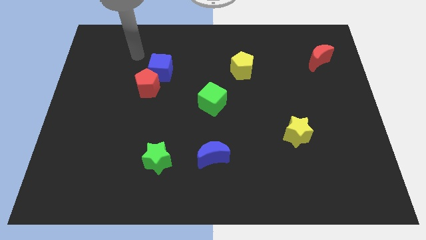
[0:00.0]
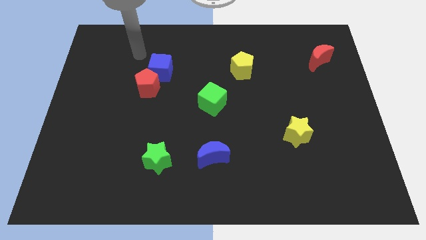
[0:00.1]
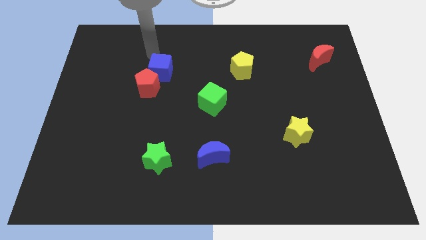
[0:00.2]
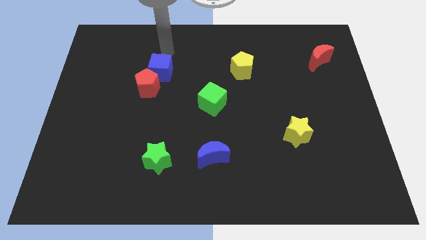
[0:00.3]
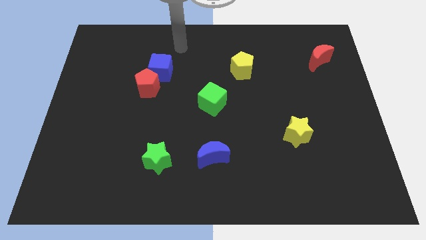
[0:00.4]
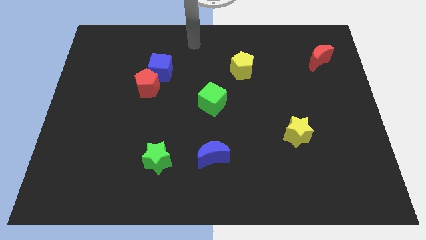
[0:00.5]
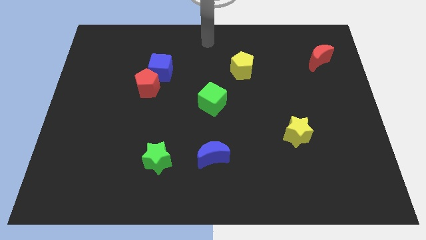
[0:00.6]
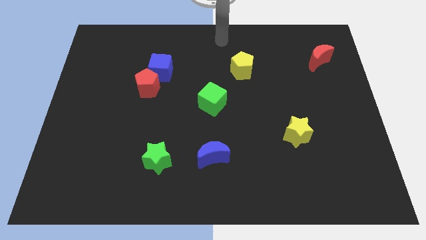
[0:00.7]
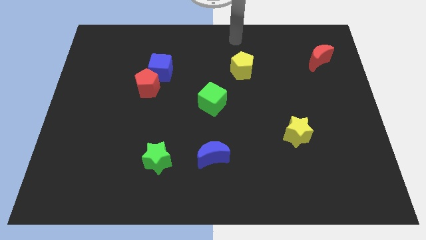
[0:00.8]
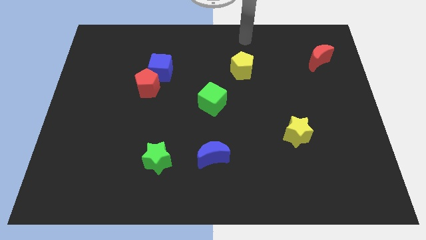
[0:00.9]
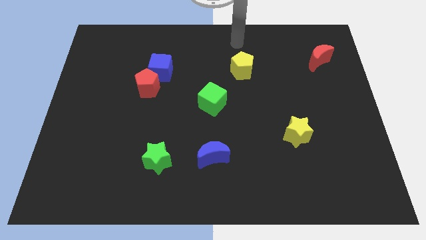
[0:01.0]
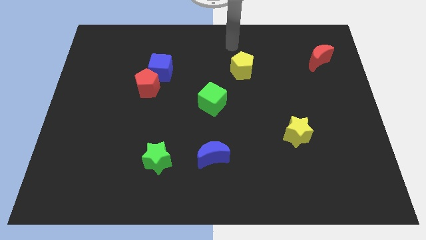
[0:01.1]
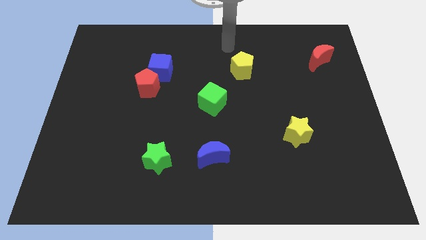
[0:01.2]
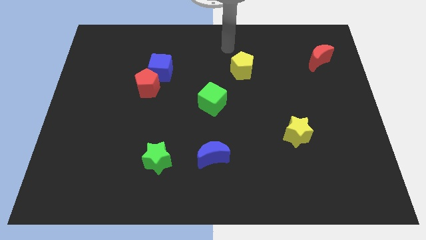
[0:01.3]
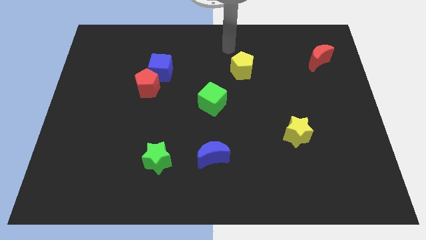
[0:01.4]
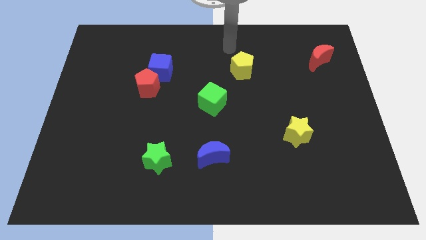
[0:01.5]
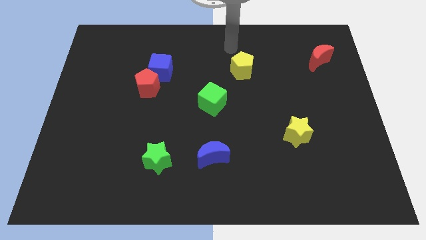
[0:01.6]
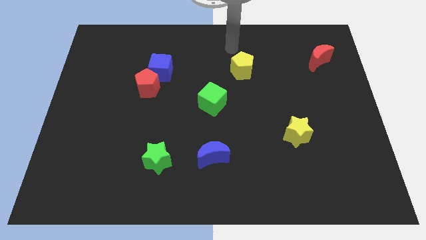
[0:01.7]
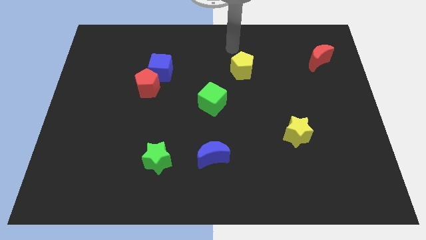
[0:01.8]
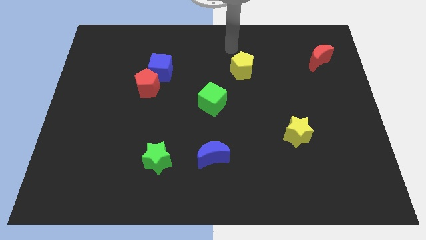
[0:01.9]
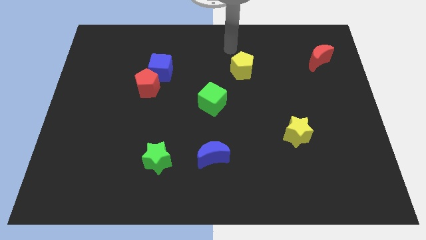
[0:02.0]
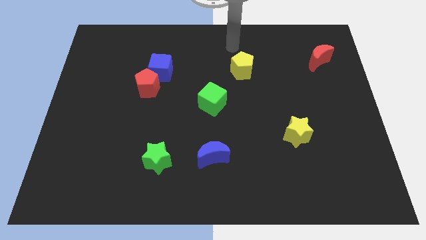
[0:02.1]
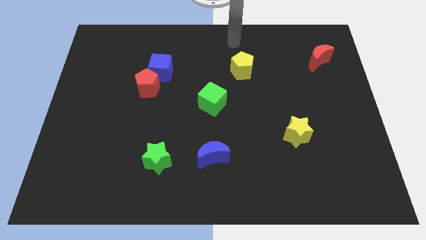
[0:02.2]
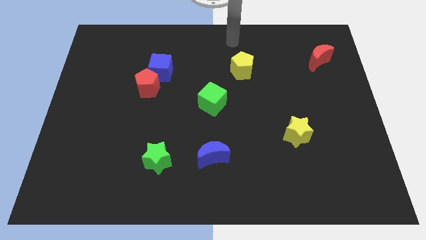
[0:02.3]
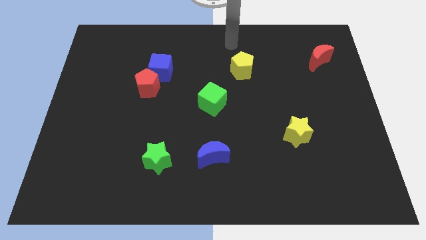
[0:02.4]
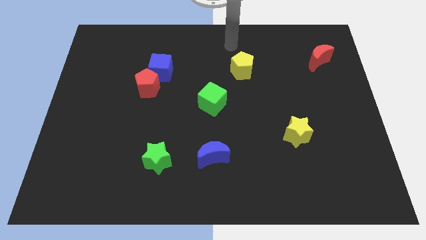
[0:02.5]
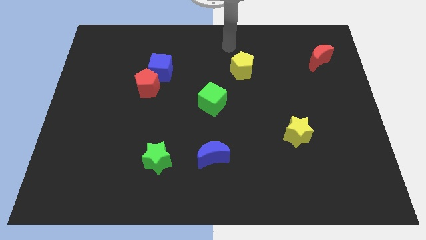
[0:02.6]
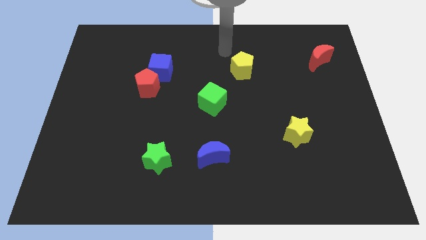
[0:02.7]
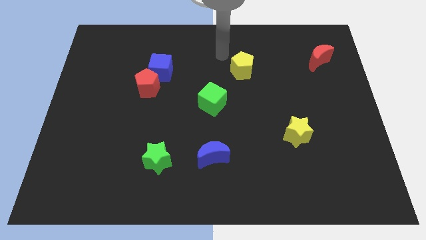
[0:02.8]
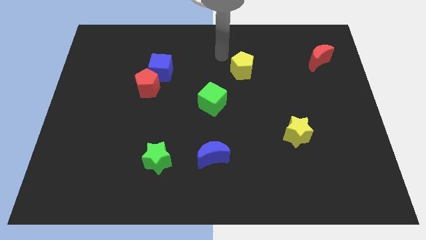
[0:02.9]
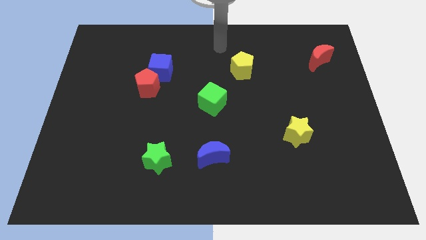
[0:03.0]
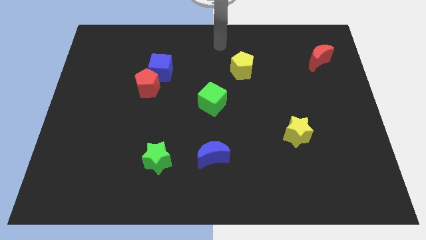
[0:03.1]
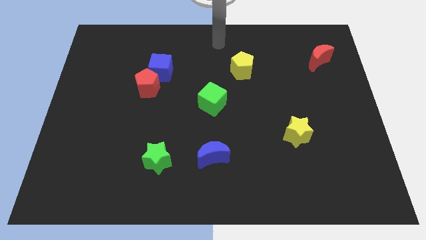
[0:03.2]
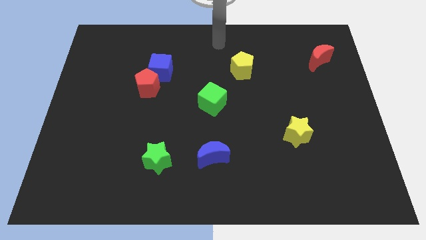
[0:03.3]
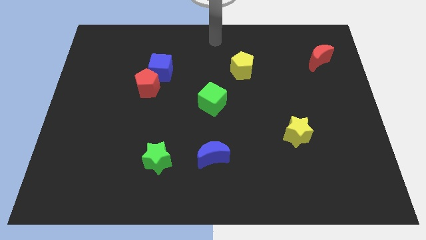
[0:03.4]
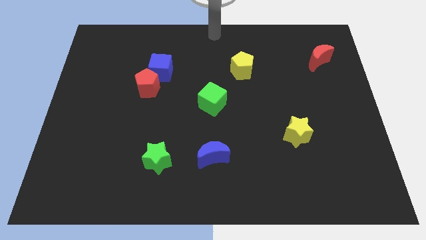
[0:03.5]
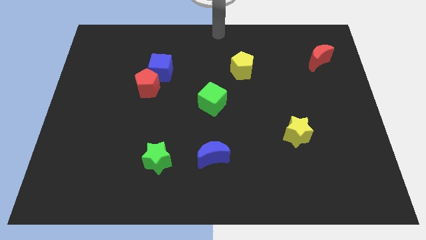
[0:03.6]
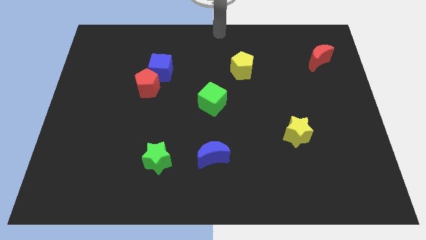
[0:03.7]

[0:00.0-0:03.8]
point your at the top center of the board

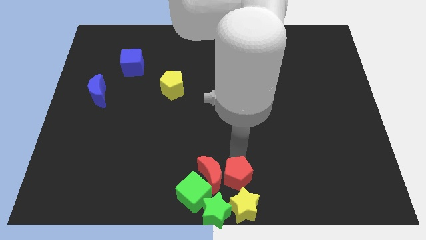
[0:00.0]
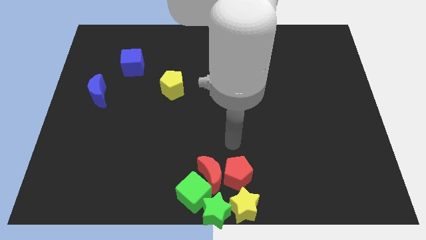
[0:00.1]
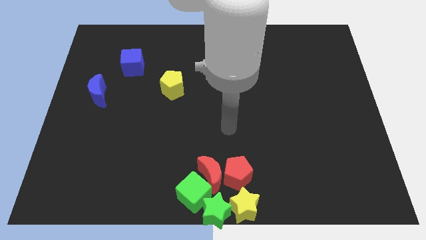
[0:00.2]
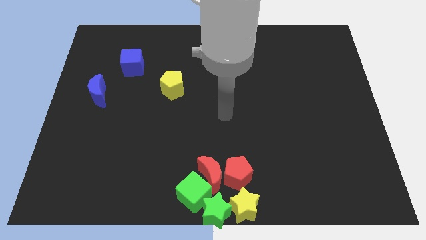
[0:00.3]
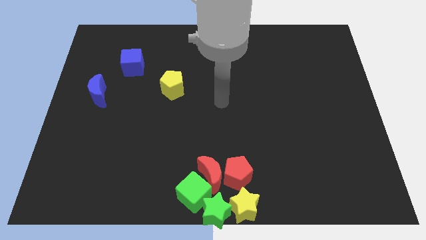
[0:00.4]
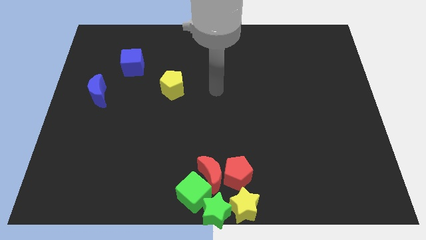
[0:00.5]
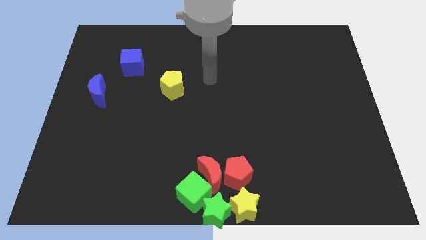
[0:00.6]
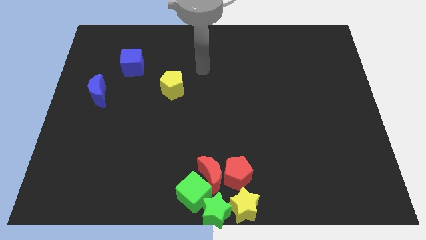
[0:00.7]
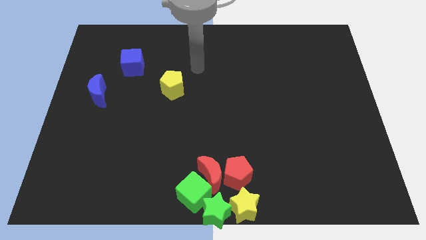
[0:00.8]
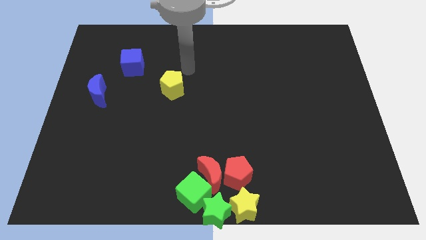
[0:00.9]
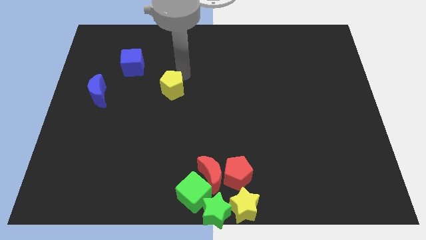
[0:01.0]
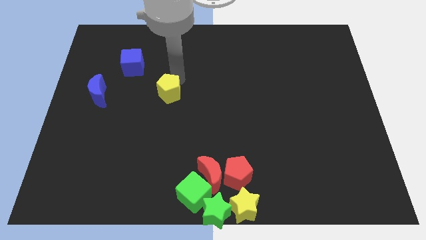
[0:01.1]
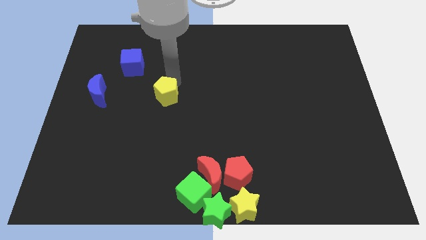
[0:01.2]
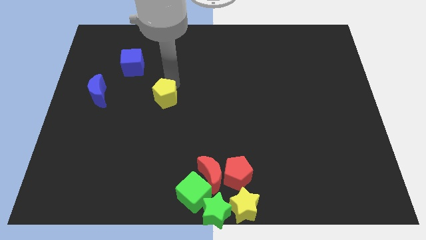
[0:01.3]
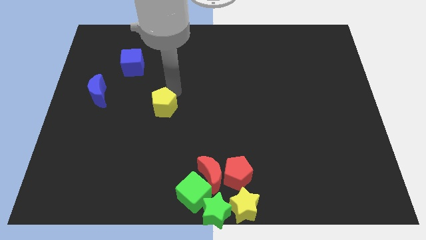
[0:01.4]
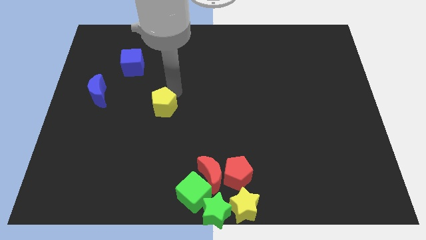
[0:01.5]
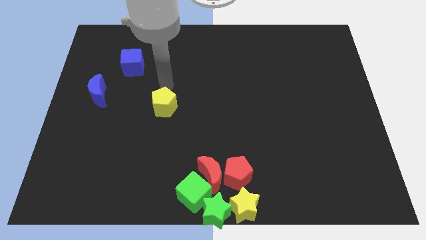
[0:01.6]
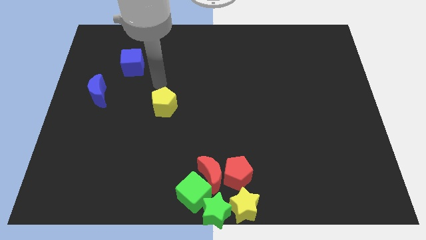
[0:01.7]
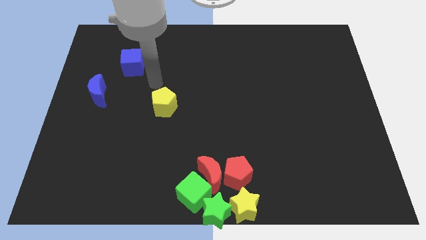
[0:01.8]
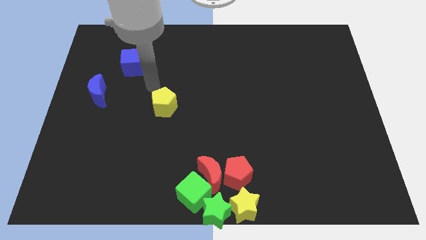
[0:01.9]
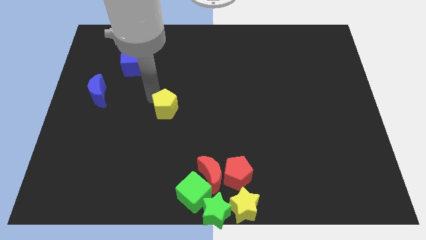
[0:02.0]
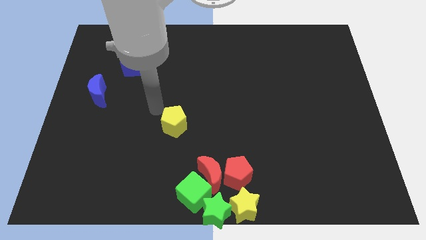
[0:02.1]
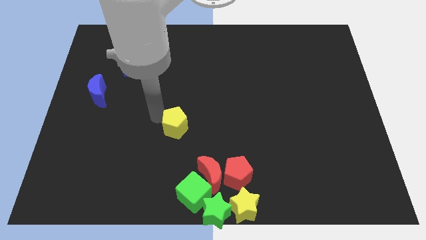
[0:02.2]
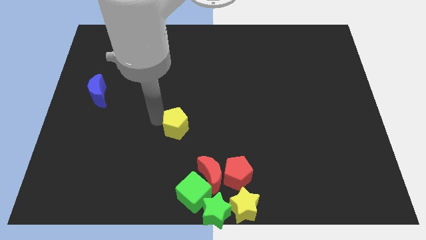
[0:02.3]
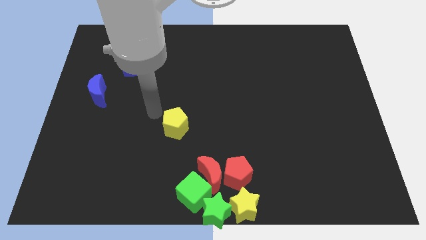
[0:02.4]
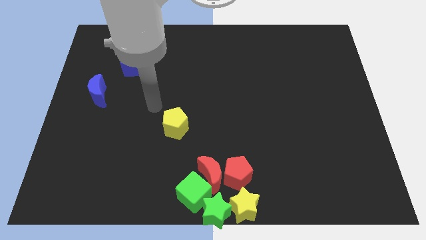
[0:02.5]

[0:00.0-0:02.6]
push the yellow pentagon to the top right of the red crescent

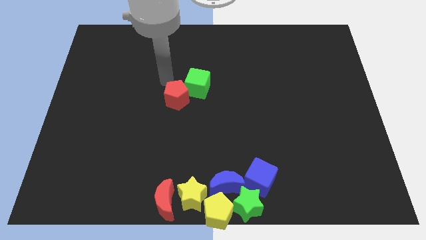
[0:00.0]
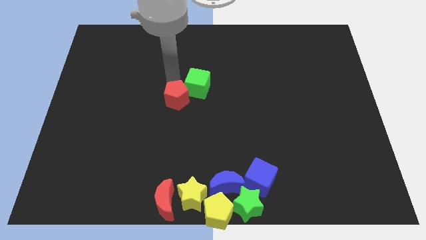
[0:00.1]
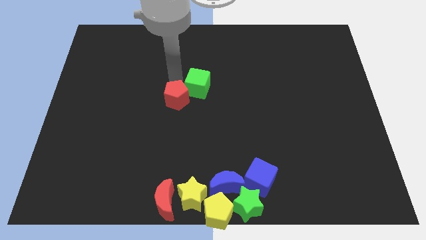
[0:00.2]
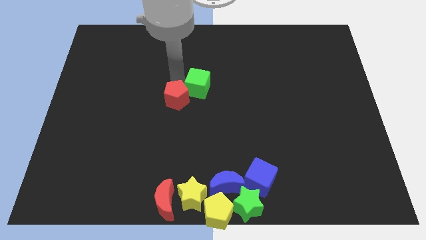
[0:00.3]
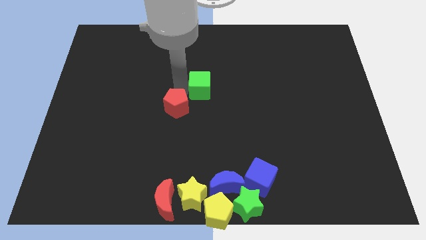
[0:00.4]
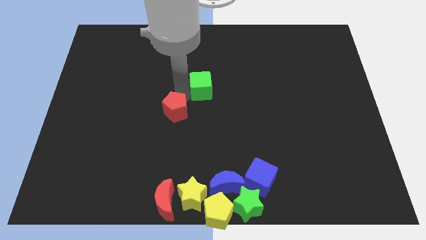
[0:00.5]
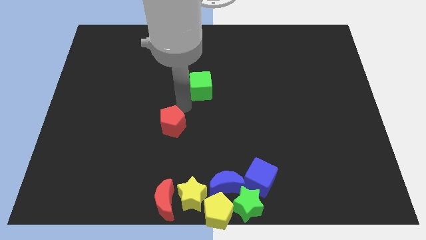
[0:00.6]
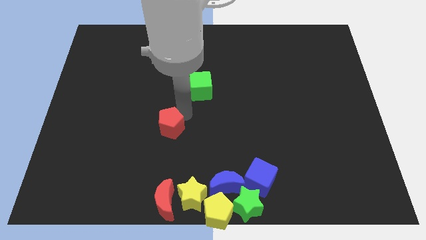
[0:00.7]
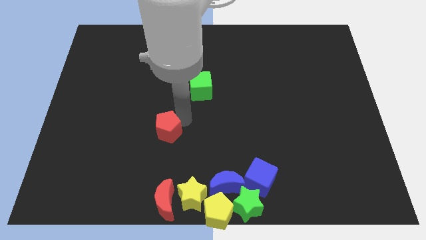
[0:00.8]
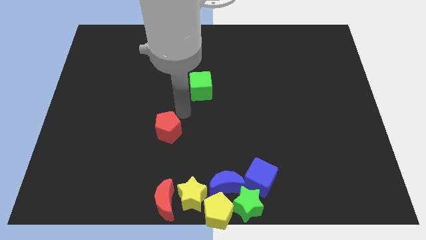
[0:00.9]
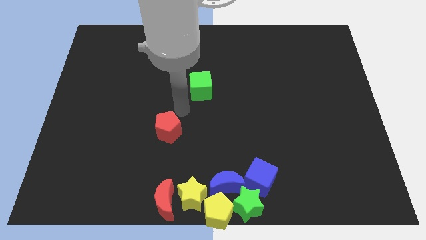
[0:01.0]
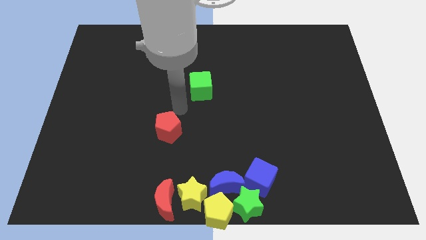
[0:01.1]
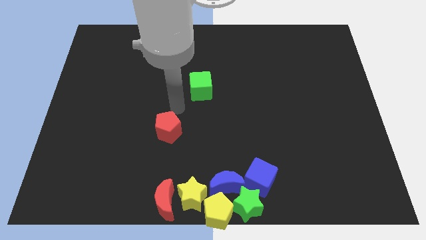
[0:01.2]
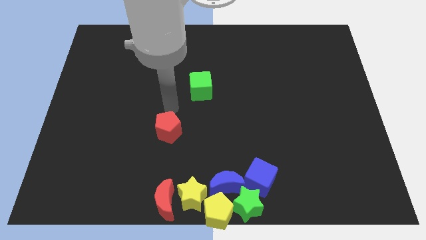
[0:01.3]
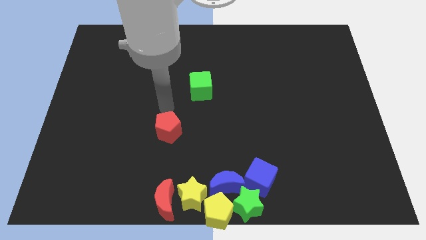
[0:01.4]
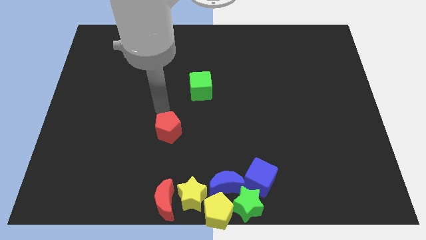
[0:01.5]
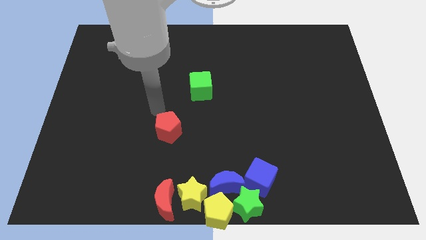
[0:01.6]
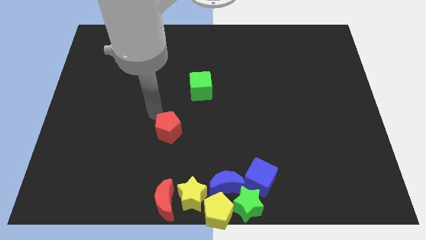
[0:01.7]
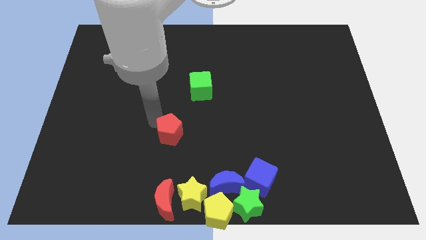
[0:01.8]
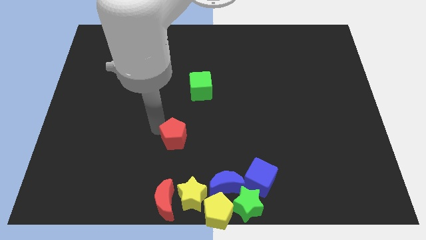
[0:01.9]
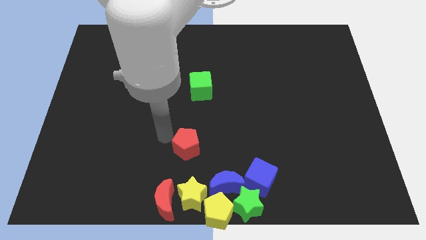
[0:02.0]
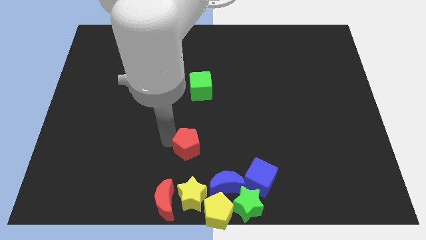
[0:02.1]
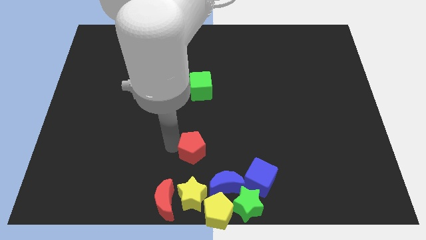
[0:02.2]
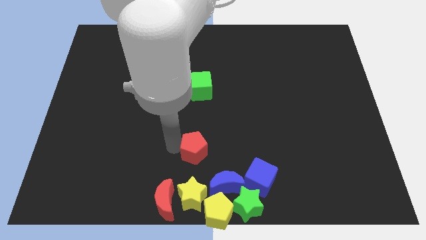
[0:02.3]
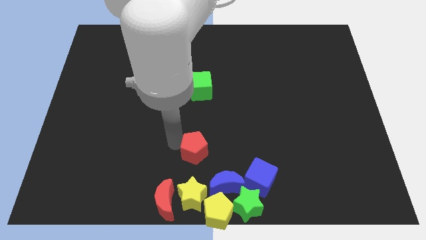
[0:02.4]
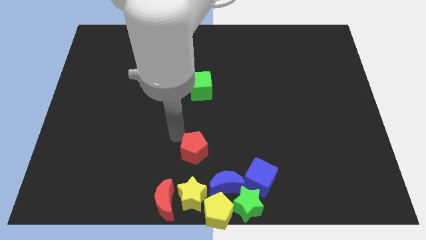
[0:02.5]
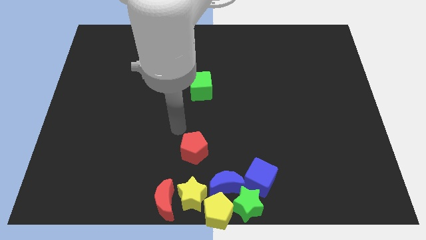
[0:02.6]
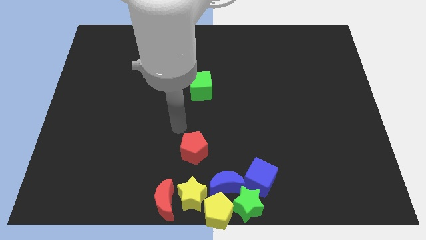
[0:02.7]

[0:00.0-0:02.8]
move red pentagon apart from the green cube
